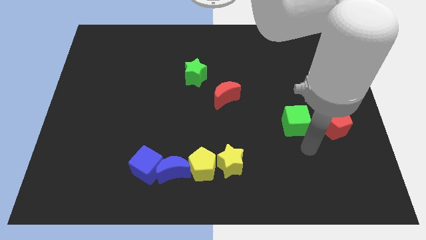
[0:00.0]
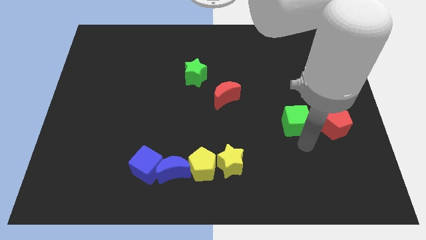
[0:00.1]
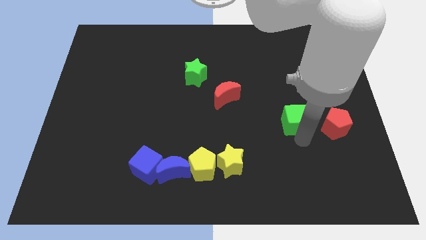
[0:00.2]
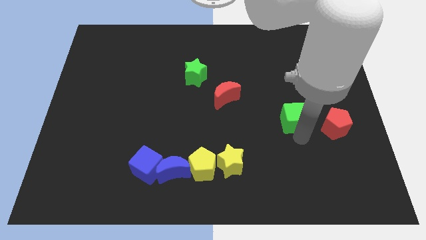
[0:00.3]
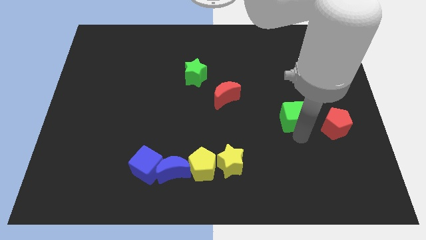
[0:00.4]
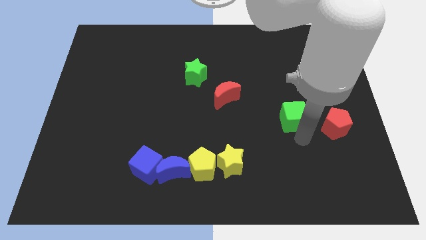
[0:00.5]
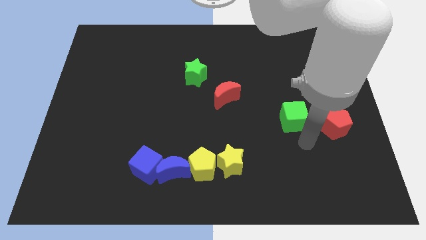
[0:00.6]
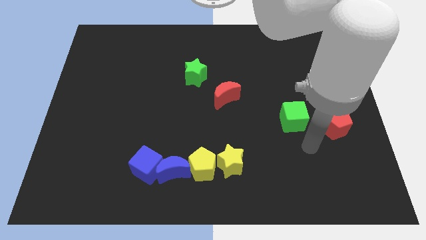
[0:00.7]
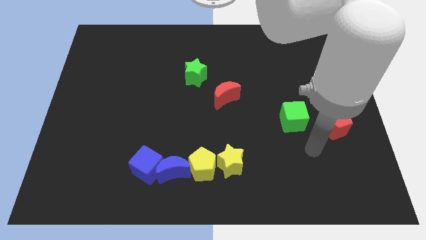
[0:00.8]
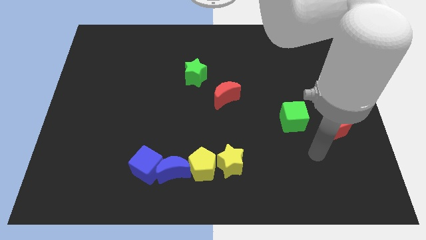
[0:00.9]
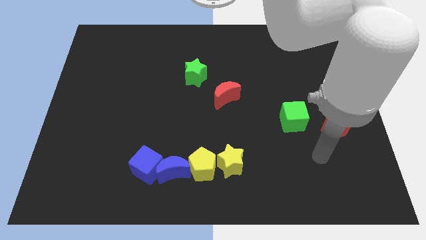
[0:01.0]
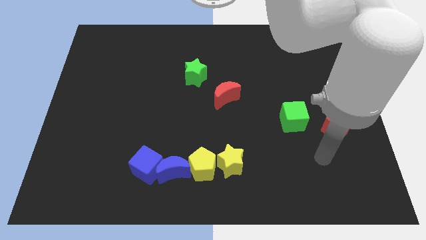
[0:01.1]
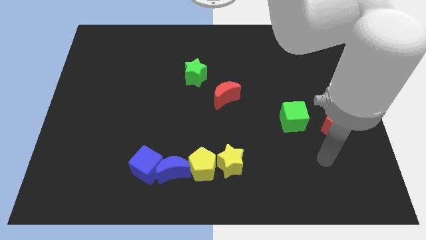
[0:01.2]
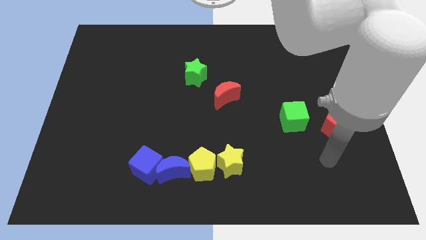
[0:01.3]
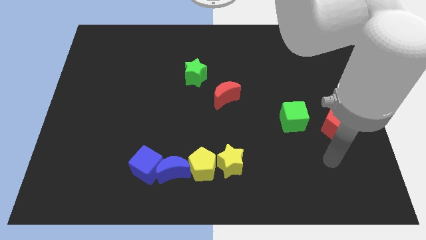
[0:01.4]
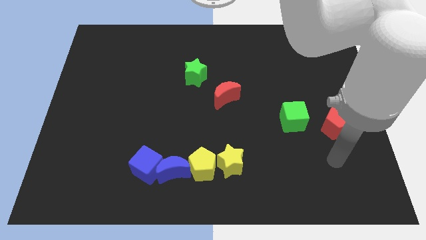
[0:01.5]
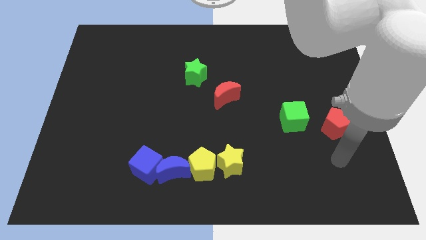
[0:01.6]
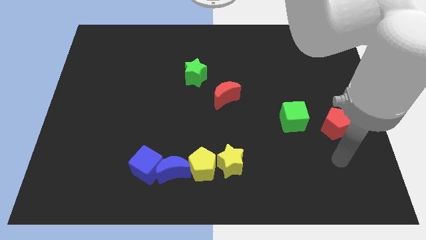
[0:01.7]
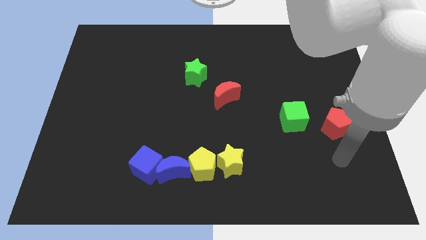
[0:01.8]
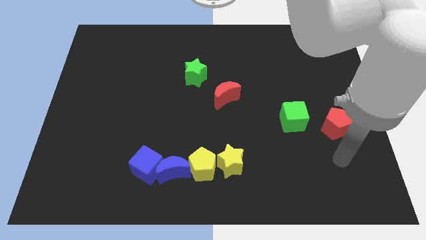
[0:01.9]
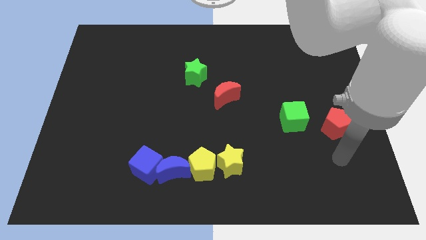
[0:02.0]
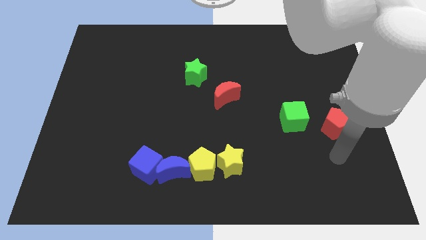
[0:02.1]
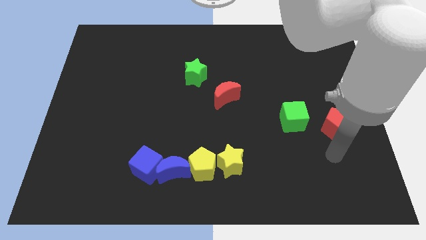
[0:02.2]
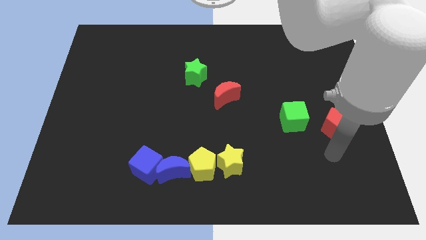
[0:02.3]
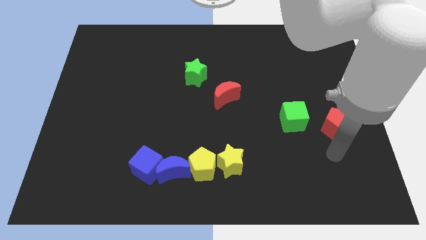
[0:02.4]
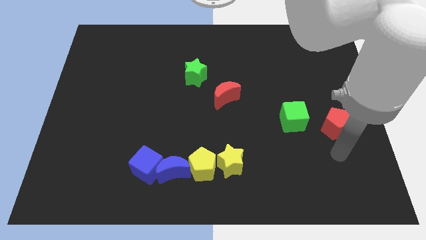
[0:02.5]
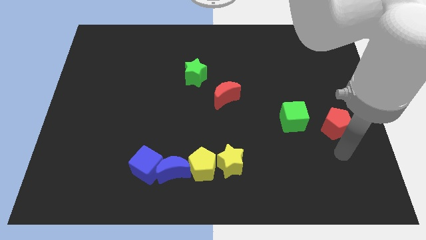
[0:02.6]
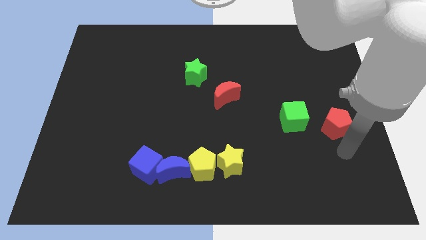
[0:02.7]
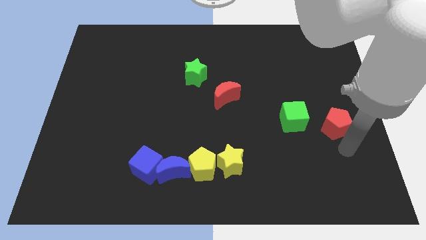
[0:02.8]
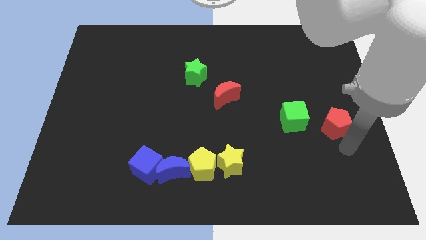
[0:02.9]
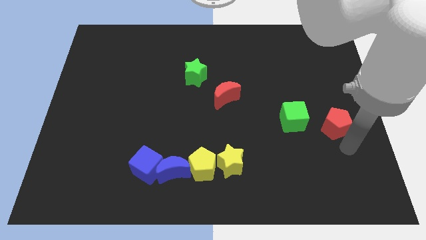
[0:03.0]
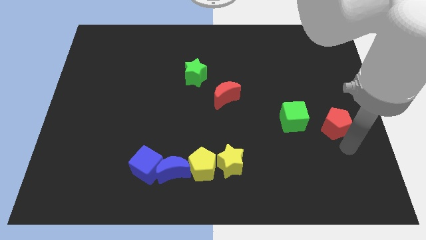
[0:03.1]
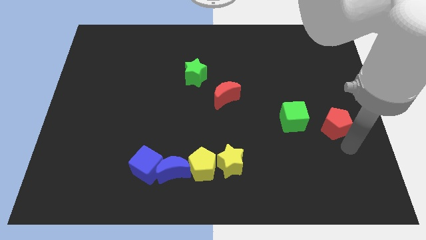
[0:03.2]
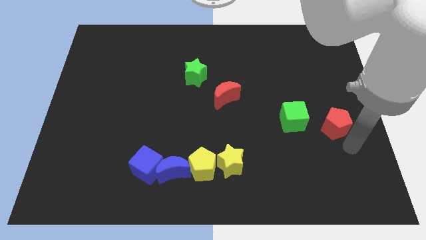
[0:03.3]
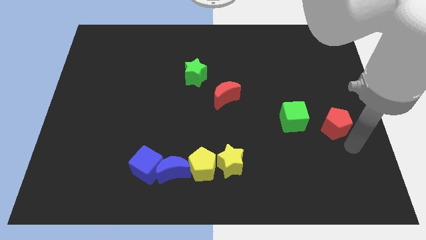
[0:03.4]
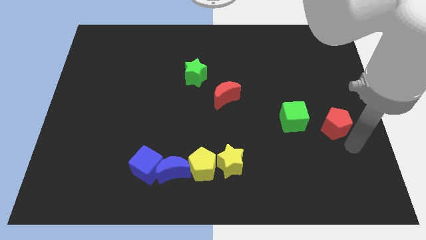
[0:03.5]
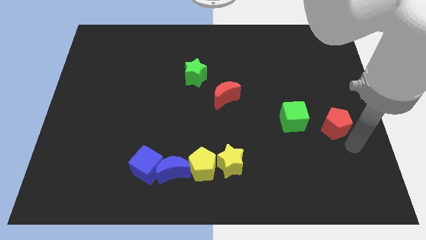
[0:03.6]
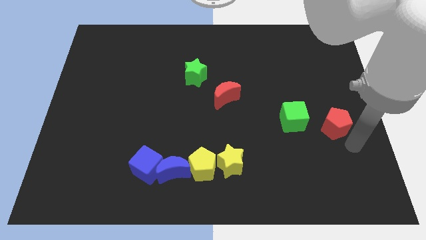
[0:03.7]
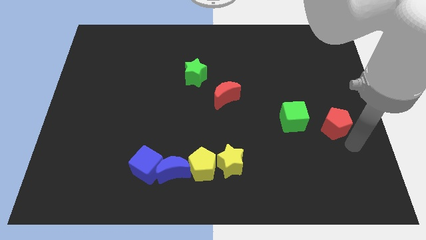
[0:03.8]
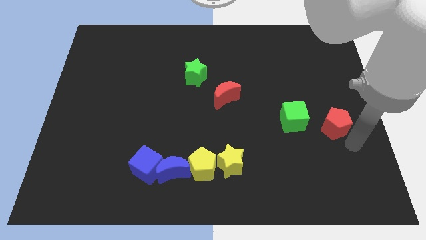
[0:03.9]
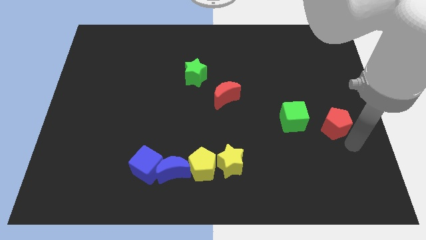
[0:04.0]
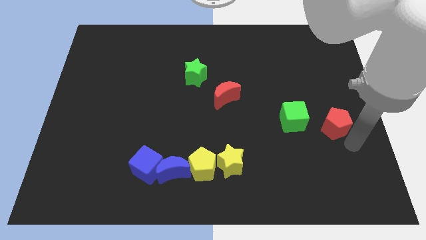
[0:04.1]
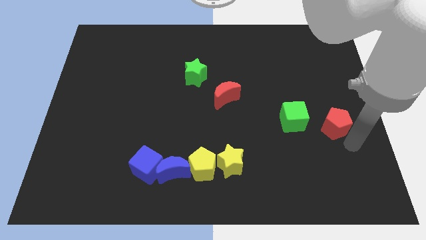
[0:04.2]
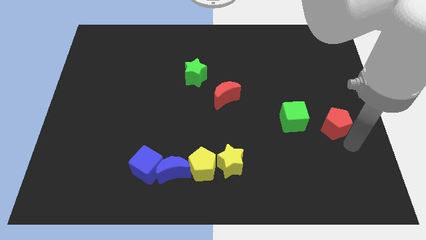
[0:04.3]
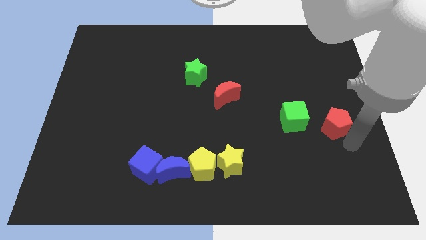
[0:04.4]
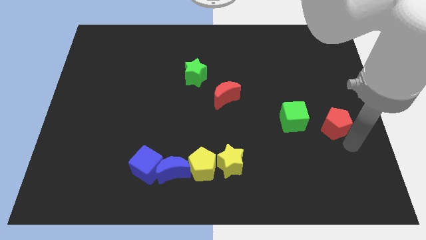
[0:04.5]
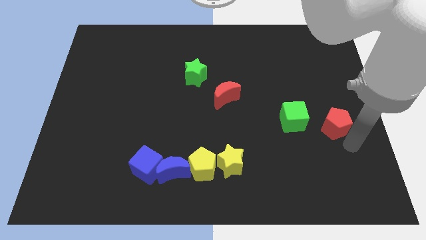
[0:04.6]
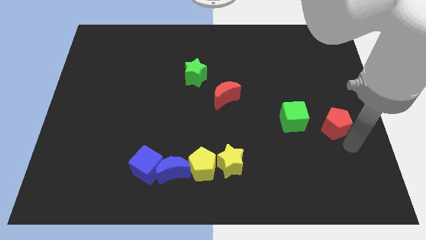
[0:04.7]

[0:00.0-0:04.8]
go near to the red pentagon

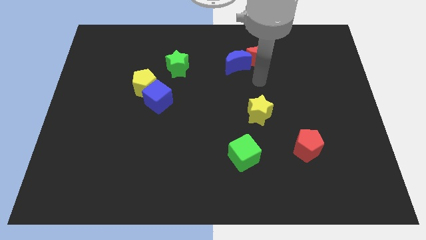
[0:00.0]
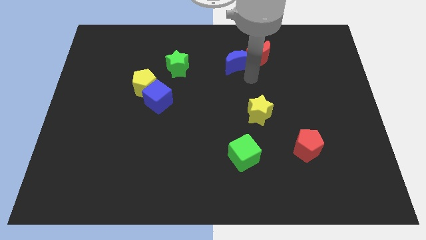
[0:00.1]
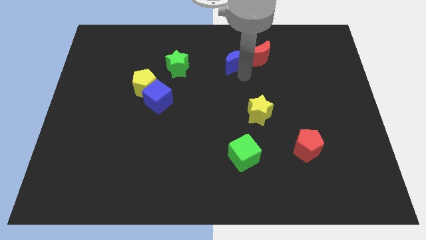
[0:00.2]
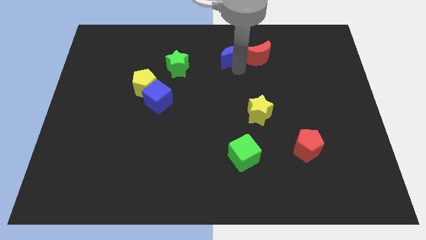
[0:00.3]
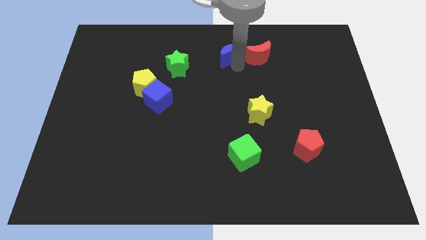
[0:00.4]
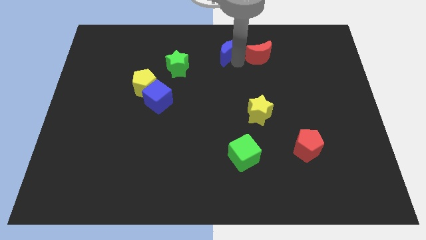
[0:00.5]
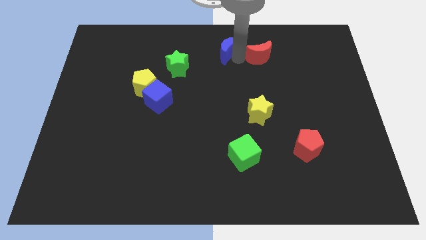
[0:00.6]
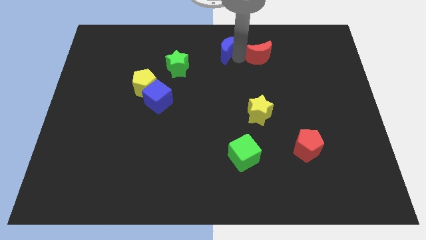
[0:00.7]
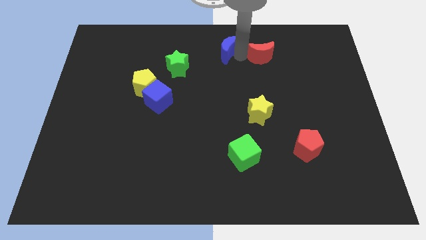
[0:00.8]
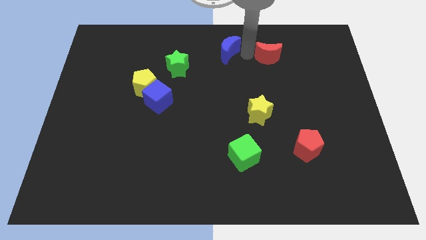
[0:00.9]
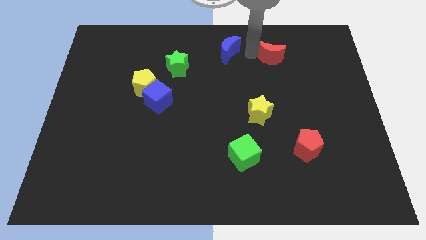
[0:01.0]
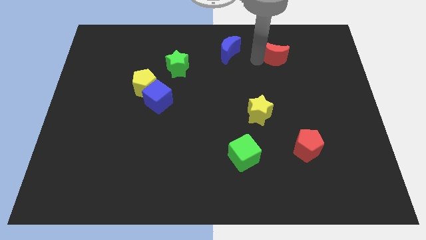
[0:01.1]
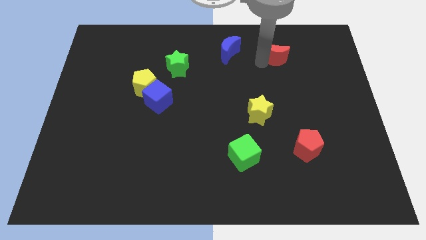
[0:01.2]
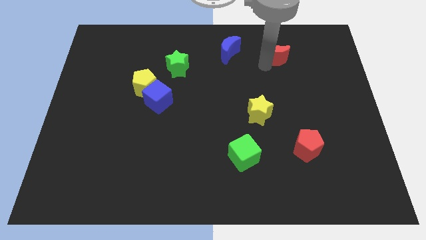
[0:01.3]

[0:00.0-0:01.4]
separate blue moon and red moon

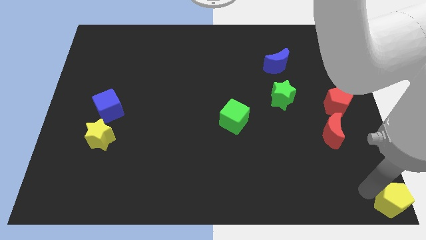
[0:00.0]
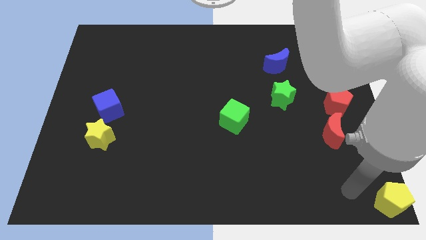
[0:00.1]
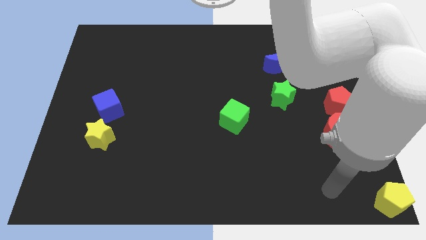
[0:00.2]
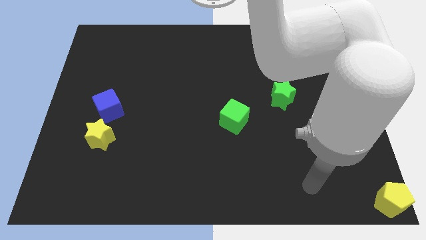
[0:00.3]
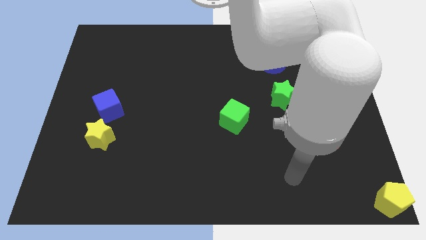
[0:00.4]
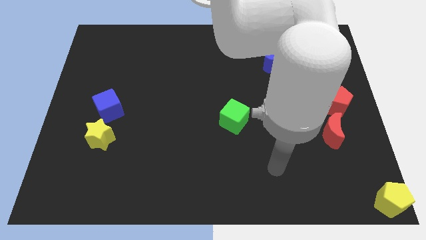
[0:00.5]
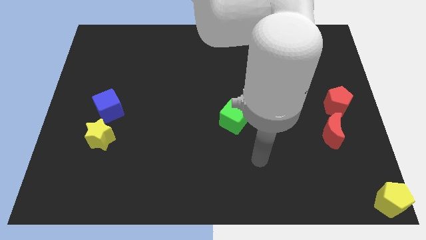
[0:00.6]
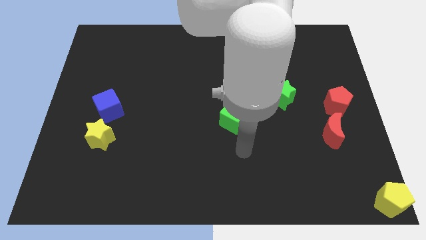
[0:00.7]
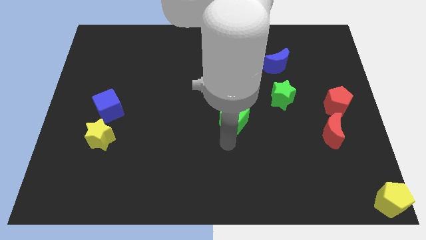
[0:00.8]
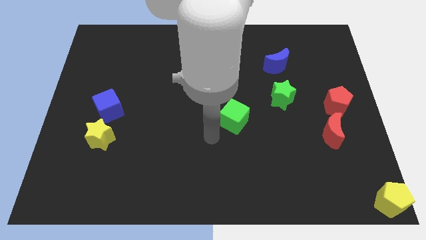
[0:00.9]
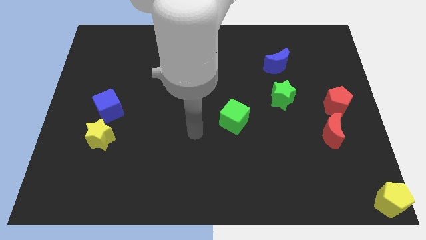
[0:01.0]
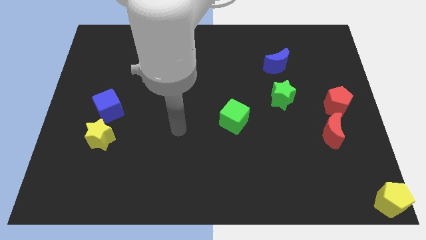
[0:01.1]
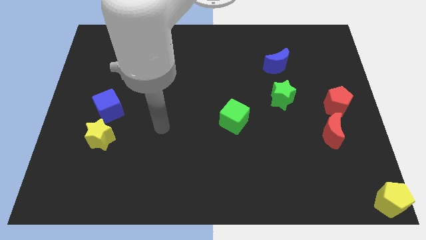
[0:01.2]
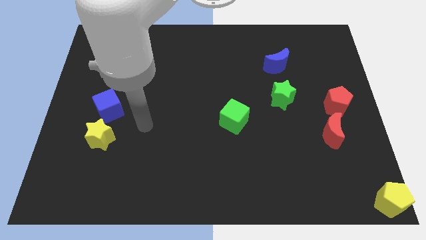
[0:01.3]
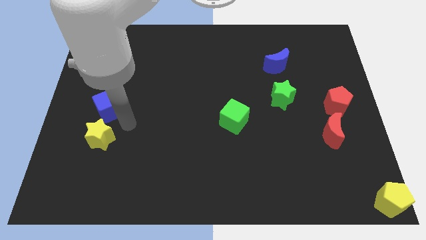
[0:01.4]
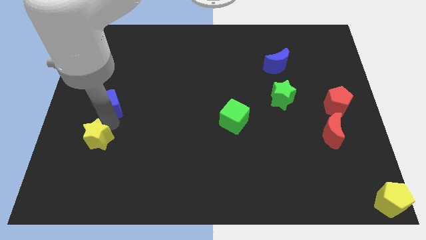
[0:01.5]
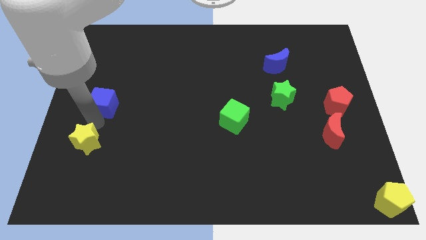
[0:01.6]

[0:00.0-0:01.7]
place your arm at the bottom of the blue cube

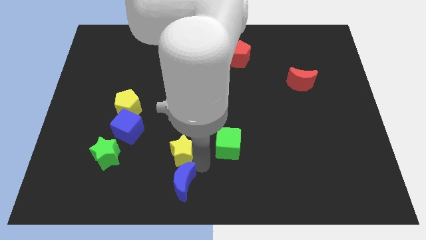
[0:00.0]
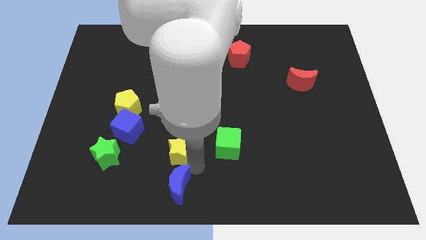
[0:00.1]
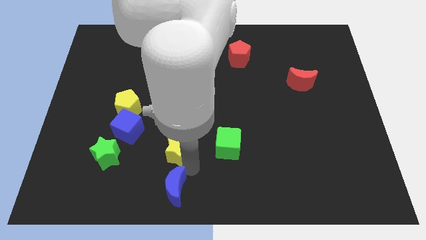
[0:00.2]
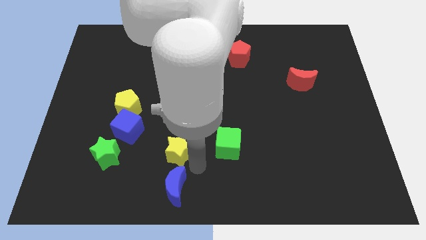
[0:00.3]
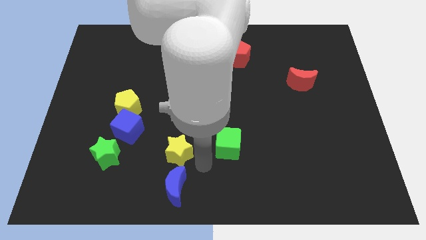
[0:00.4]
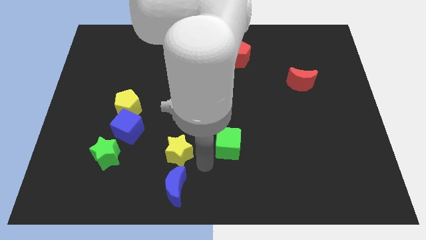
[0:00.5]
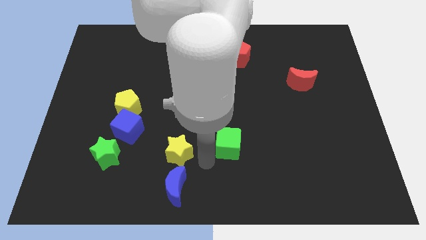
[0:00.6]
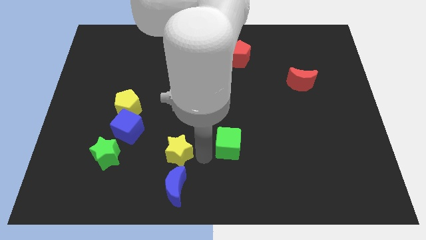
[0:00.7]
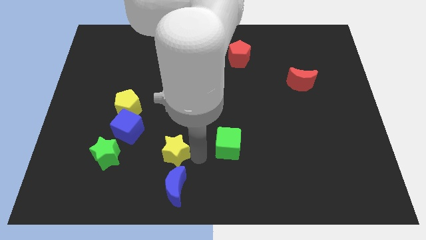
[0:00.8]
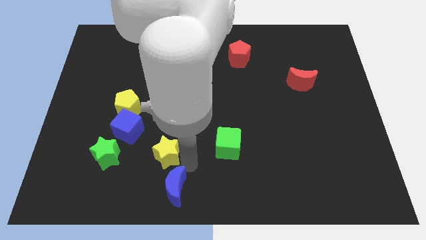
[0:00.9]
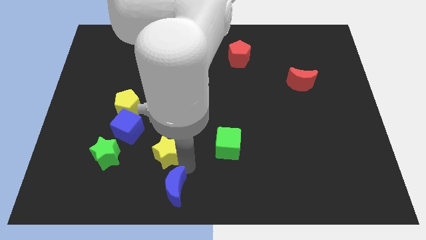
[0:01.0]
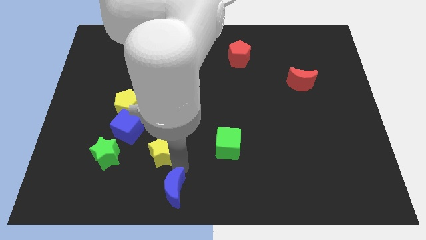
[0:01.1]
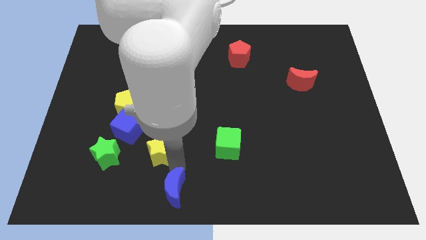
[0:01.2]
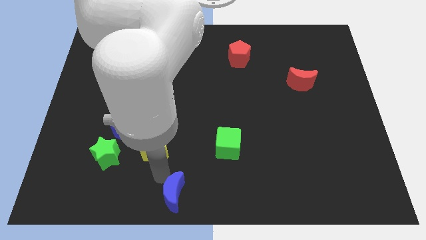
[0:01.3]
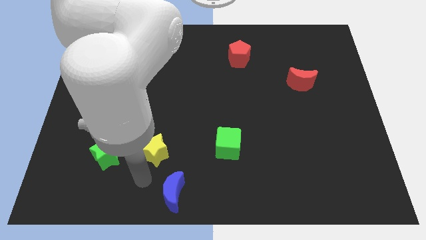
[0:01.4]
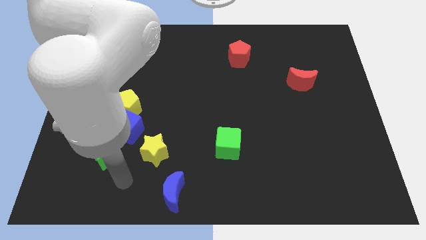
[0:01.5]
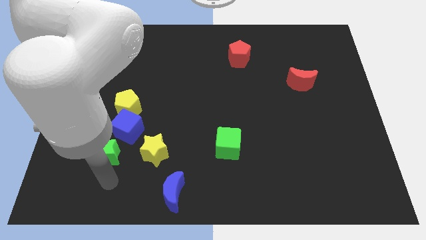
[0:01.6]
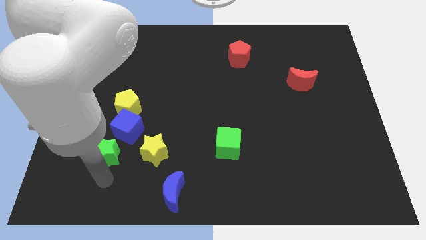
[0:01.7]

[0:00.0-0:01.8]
separate the yellow star and blue moon
